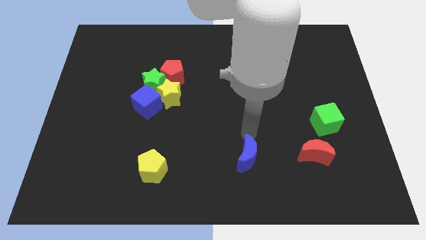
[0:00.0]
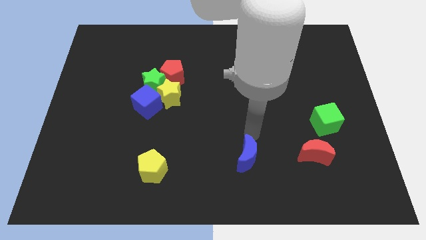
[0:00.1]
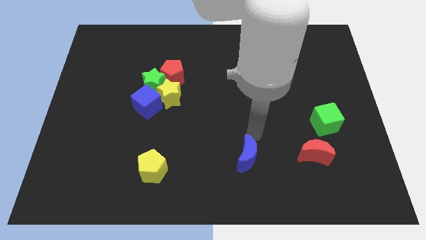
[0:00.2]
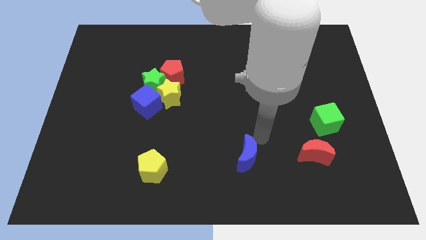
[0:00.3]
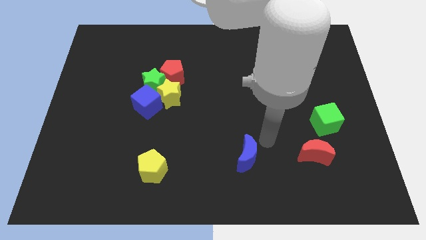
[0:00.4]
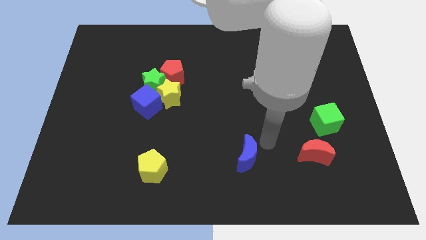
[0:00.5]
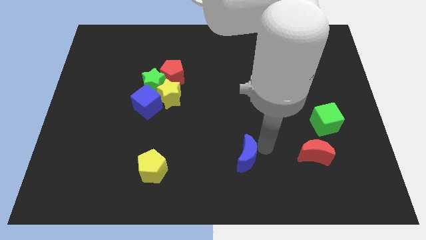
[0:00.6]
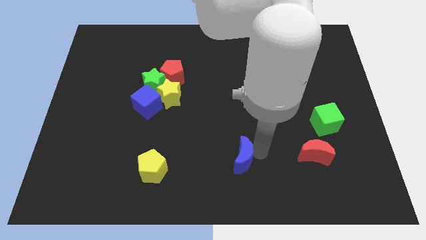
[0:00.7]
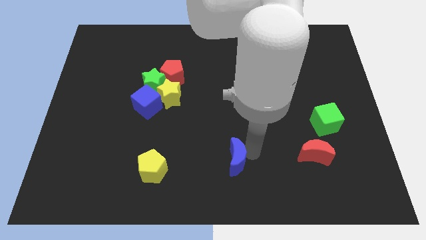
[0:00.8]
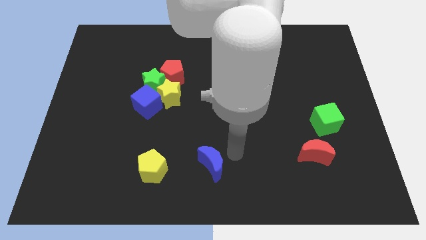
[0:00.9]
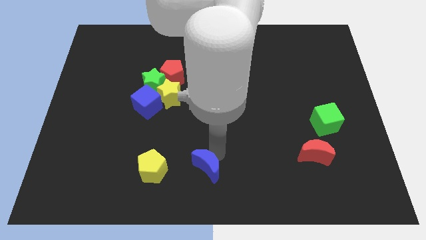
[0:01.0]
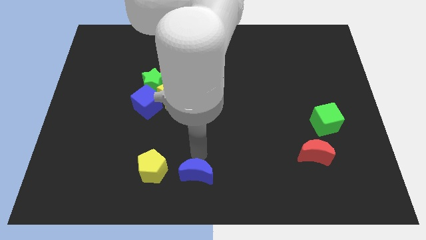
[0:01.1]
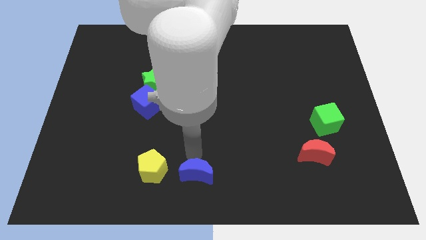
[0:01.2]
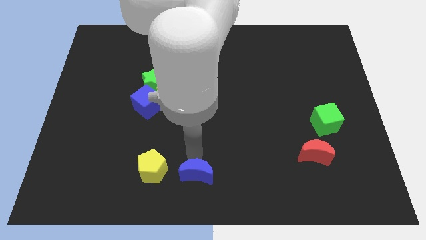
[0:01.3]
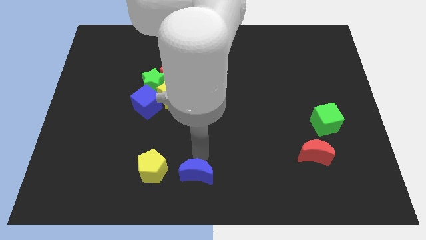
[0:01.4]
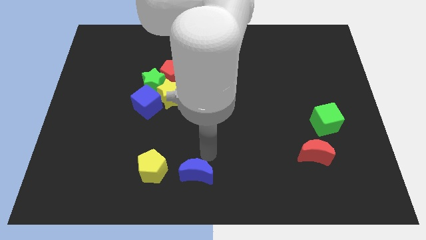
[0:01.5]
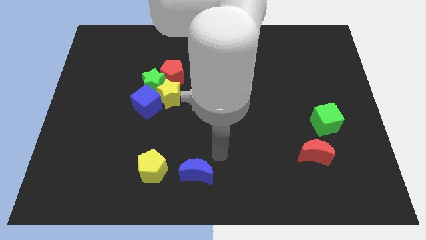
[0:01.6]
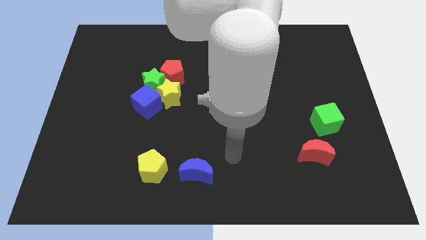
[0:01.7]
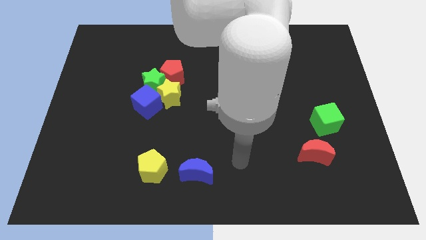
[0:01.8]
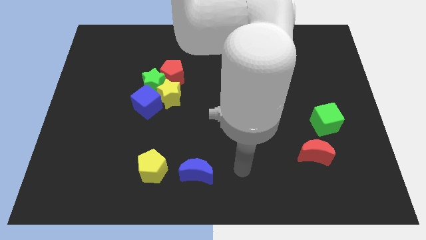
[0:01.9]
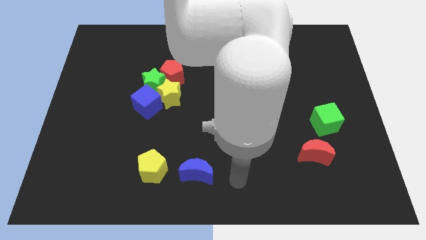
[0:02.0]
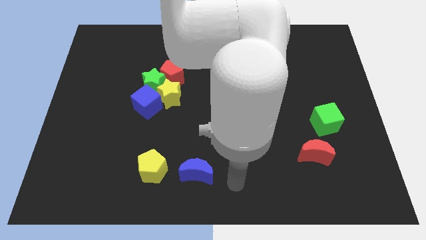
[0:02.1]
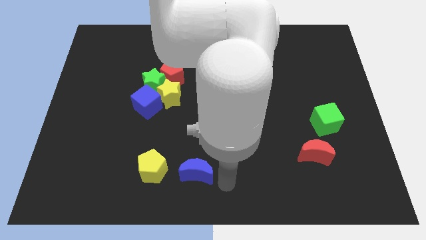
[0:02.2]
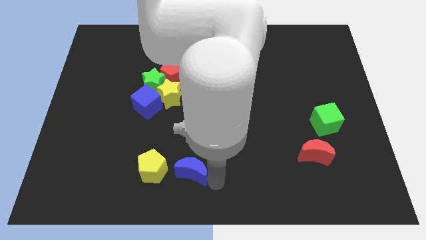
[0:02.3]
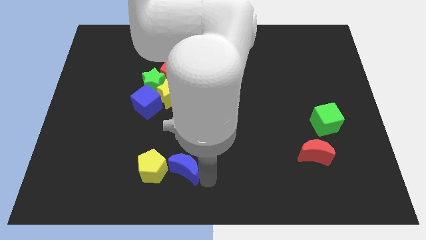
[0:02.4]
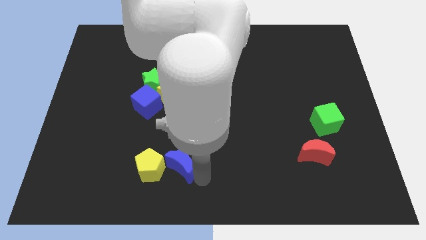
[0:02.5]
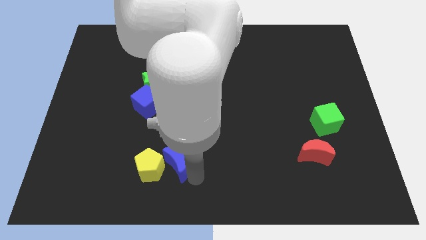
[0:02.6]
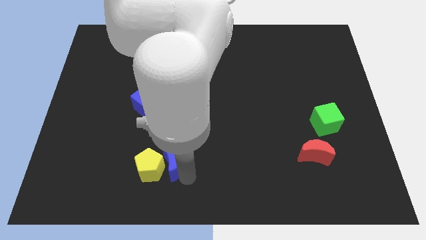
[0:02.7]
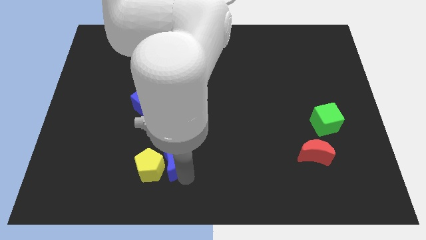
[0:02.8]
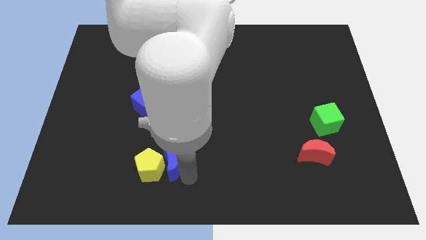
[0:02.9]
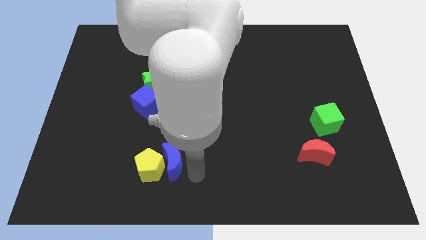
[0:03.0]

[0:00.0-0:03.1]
place the blue crescent at the right side of the yellow pentagon

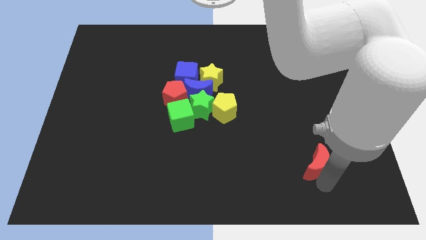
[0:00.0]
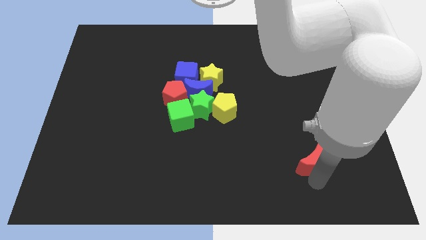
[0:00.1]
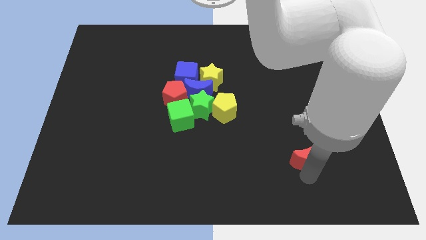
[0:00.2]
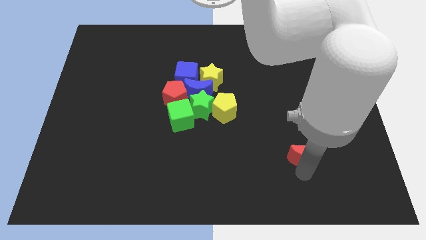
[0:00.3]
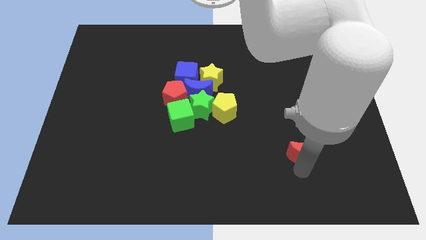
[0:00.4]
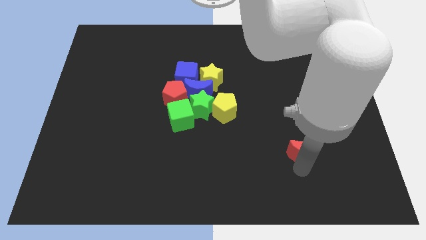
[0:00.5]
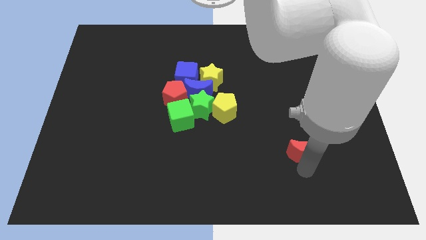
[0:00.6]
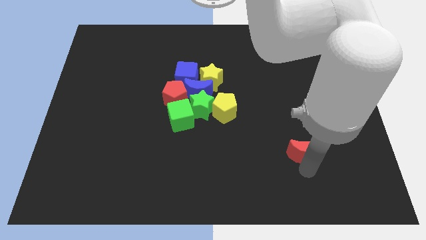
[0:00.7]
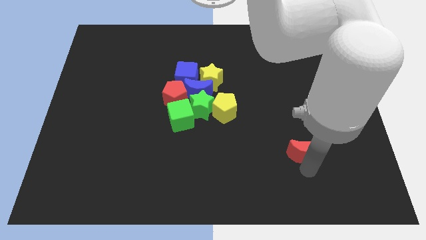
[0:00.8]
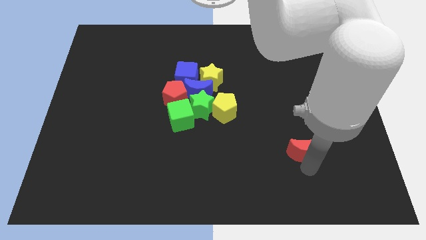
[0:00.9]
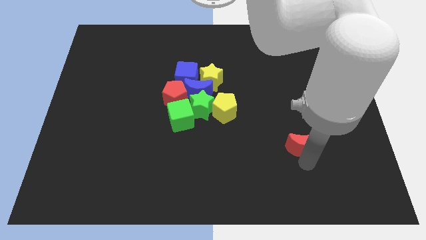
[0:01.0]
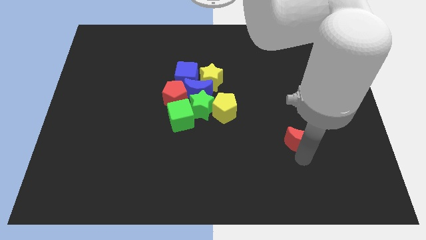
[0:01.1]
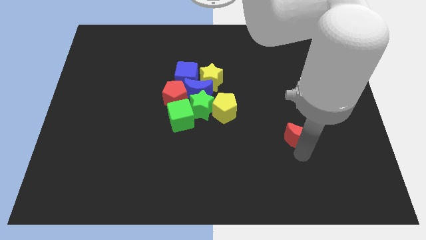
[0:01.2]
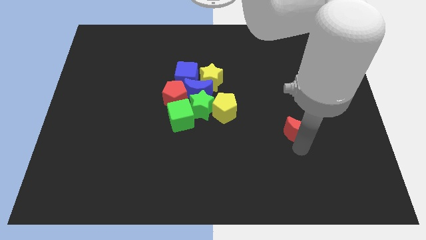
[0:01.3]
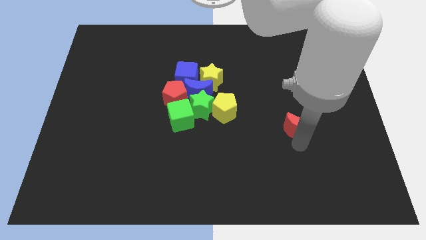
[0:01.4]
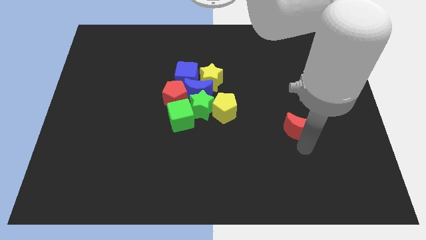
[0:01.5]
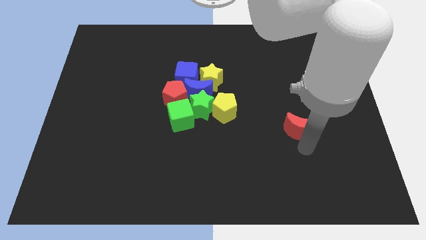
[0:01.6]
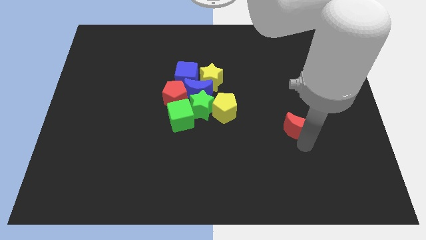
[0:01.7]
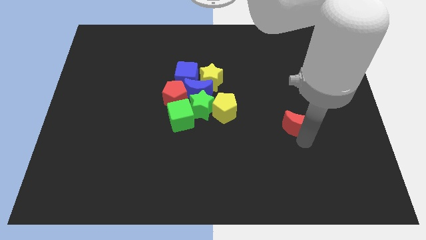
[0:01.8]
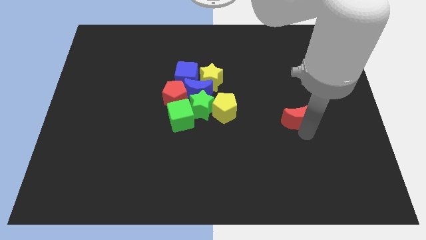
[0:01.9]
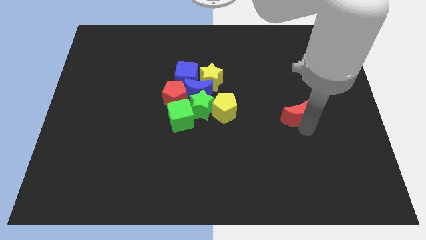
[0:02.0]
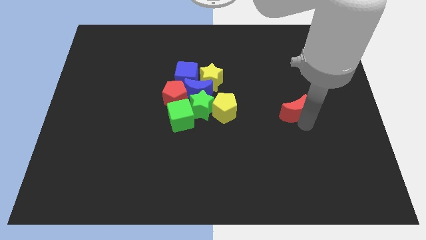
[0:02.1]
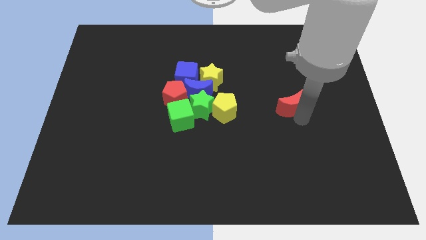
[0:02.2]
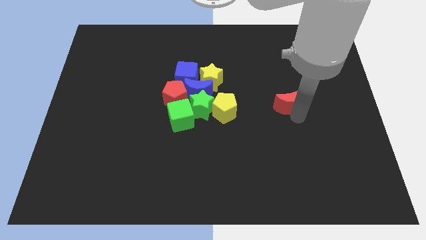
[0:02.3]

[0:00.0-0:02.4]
place the red moon parallel to yellow pentagon

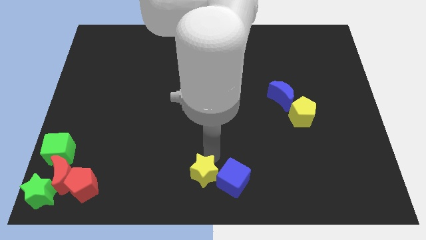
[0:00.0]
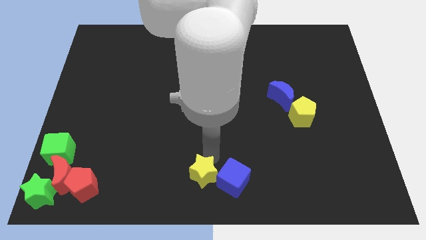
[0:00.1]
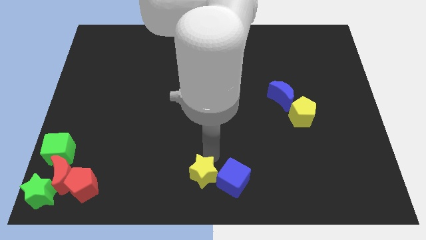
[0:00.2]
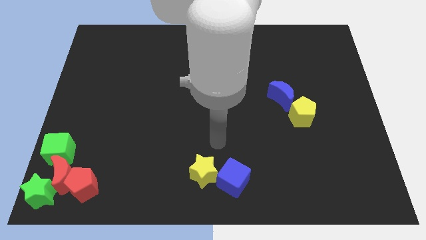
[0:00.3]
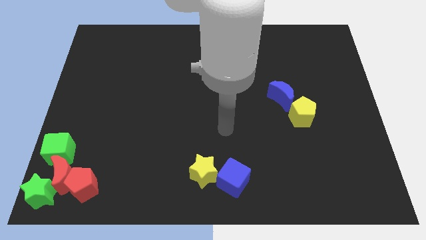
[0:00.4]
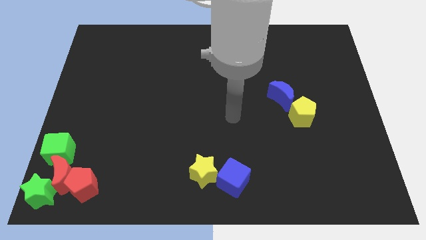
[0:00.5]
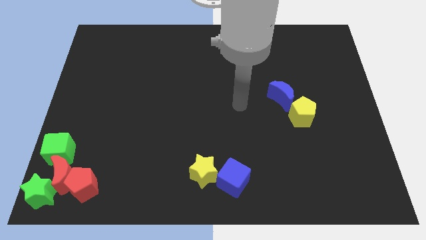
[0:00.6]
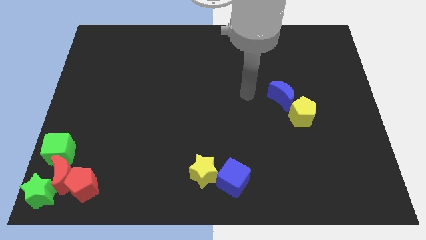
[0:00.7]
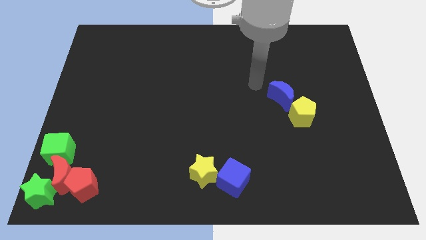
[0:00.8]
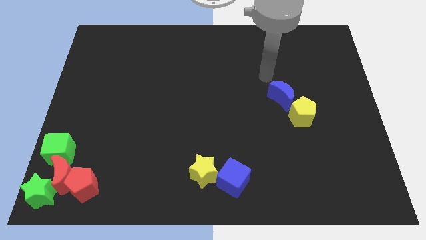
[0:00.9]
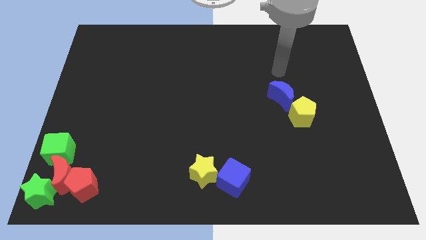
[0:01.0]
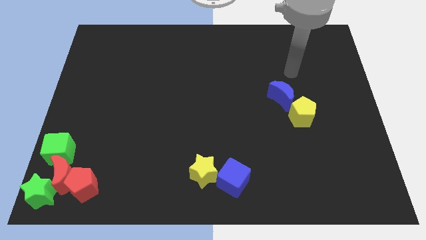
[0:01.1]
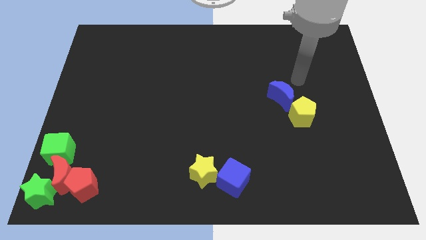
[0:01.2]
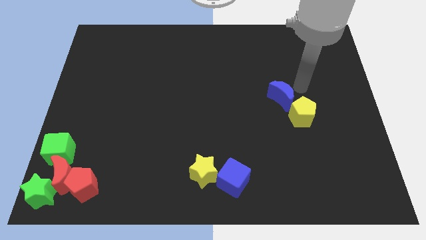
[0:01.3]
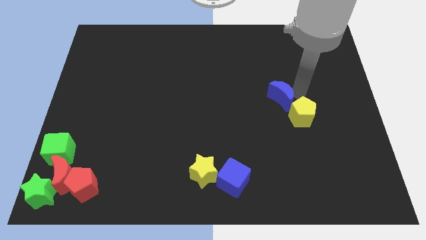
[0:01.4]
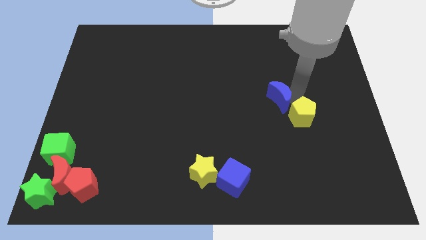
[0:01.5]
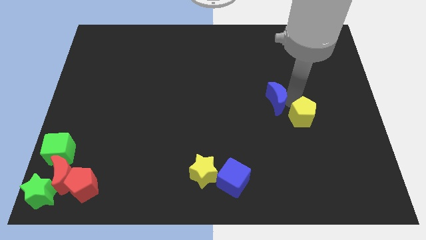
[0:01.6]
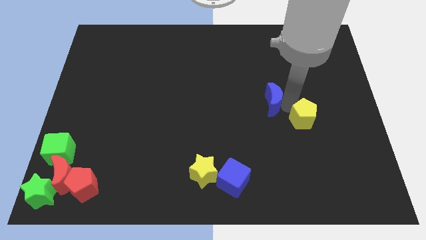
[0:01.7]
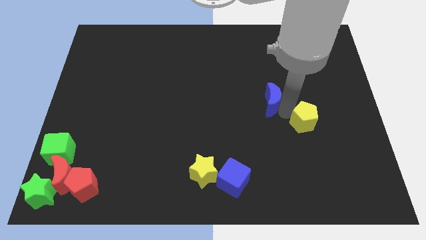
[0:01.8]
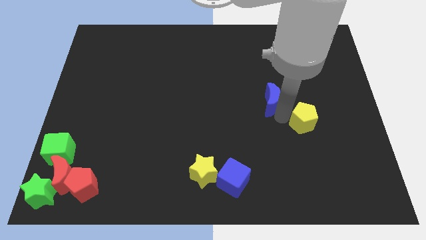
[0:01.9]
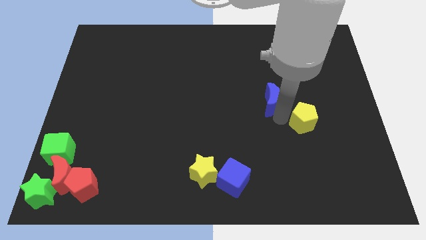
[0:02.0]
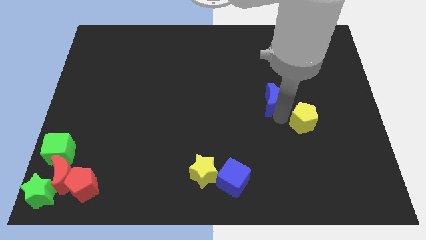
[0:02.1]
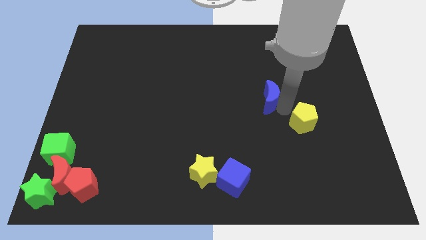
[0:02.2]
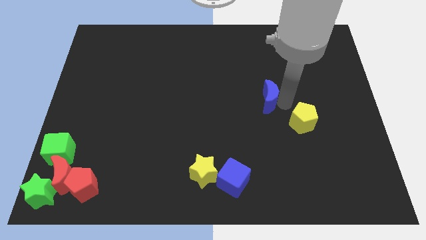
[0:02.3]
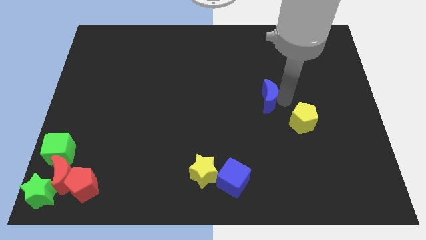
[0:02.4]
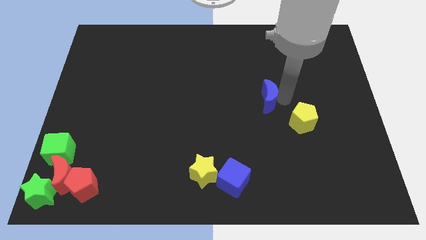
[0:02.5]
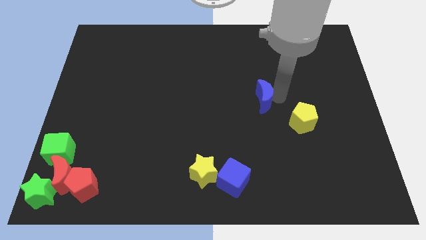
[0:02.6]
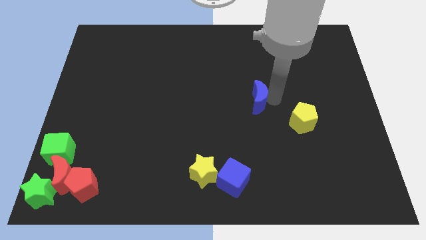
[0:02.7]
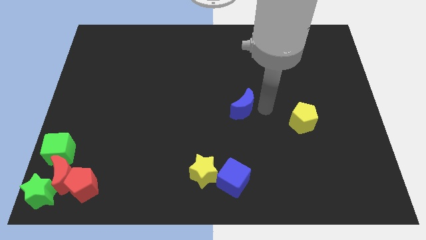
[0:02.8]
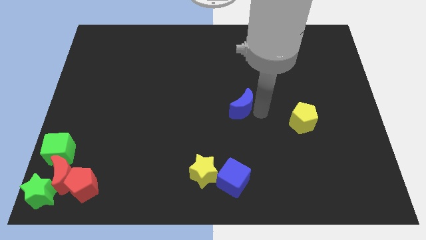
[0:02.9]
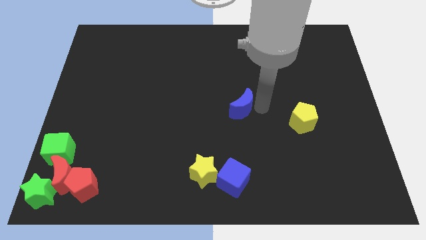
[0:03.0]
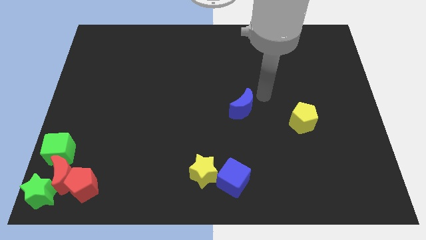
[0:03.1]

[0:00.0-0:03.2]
push blue crescent above blue cube

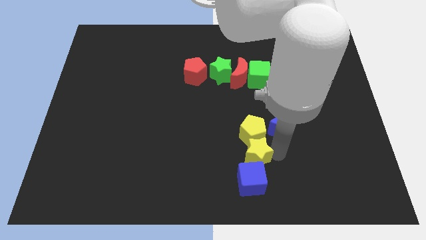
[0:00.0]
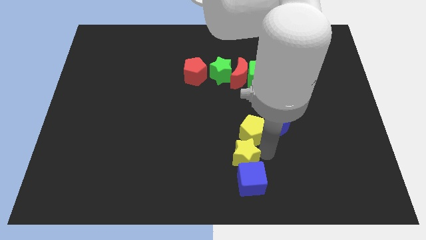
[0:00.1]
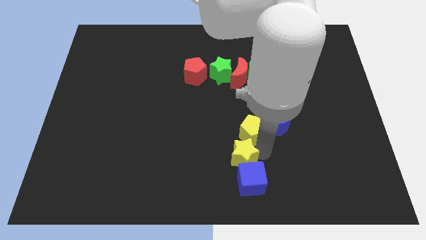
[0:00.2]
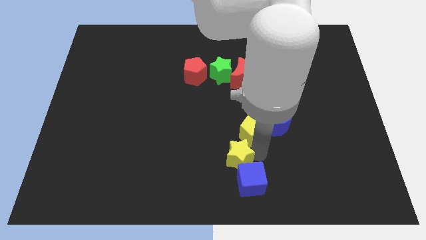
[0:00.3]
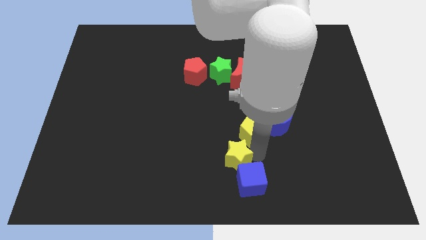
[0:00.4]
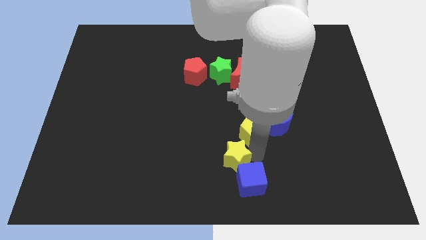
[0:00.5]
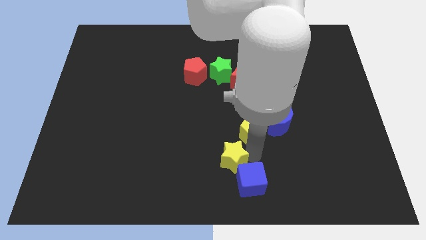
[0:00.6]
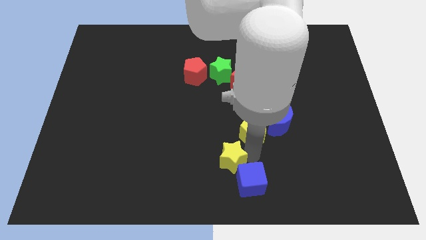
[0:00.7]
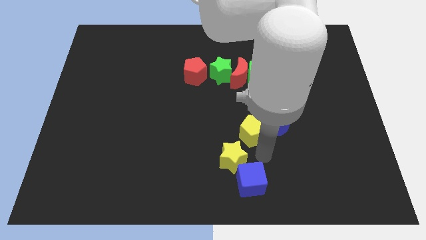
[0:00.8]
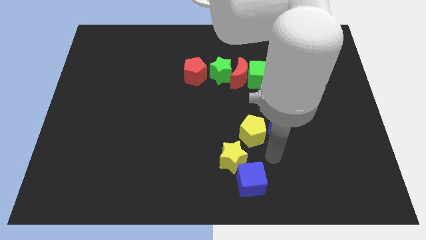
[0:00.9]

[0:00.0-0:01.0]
push the yellow star slightly left side
